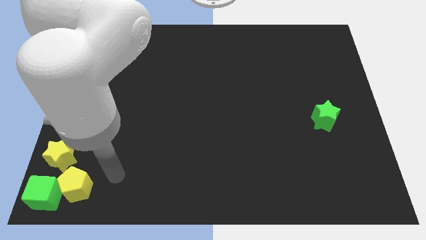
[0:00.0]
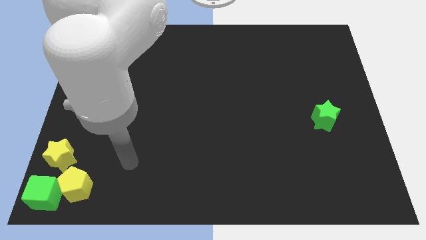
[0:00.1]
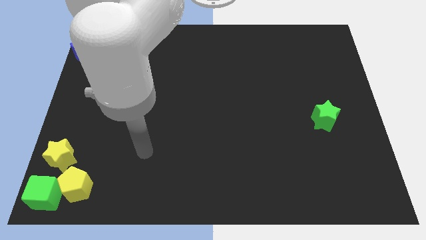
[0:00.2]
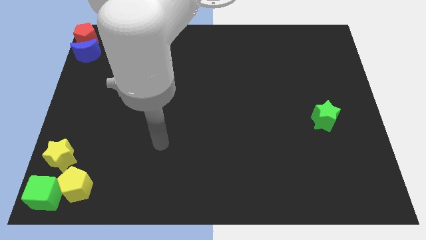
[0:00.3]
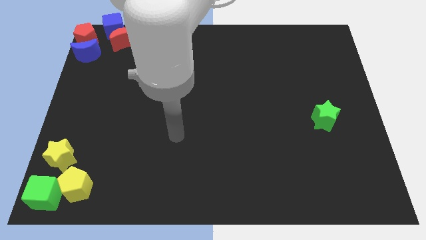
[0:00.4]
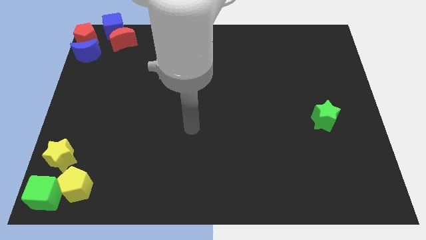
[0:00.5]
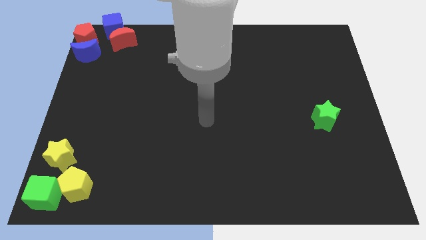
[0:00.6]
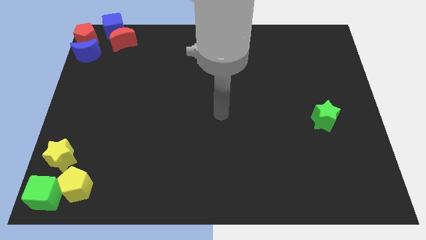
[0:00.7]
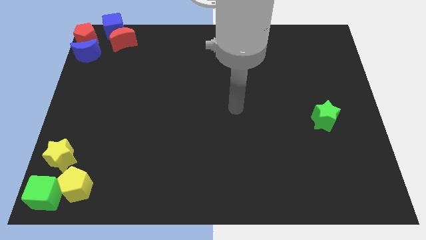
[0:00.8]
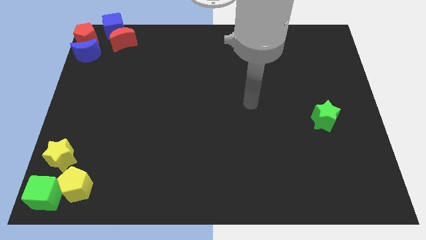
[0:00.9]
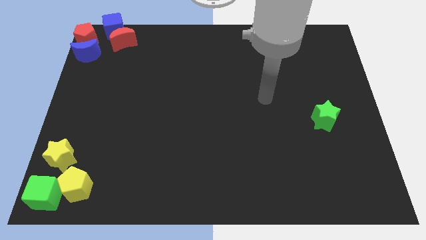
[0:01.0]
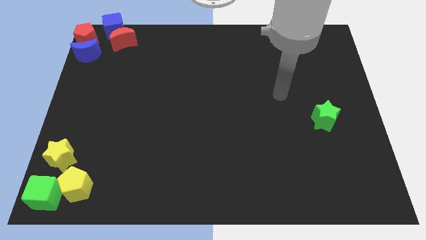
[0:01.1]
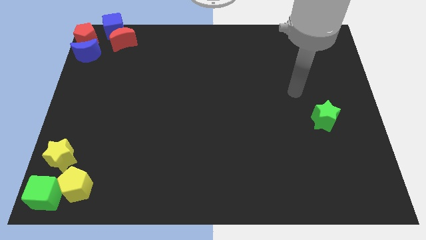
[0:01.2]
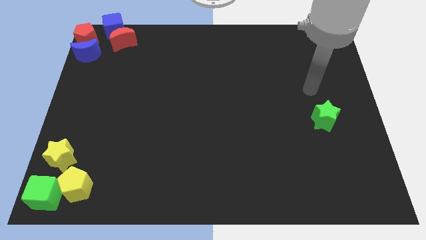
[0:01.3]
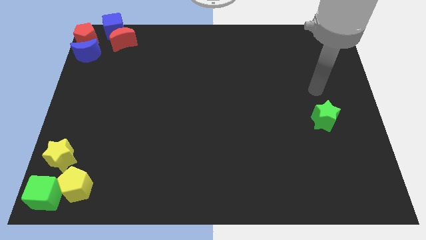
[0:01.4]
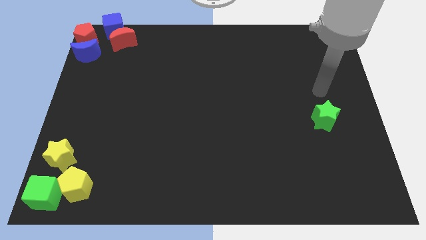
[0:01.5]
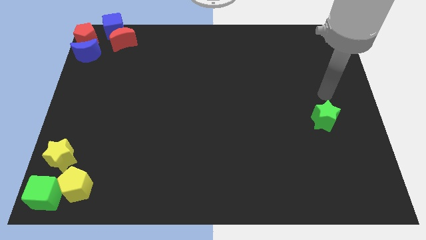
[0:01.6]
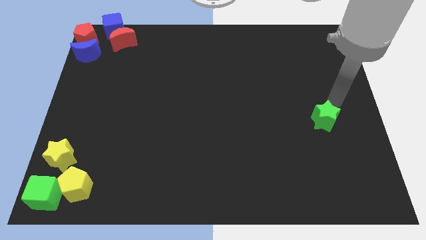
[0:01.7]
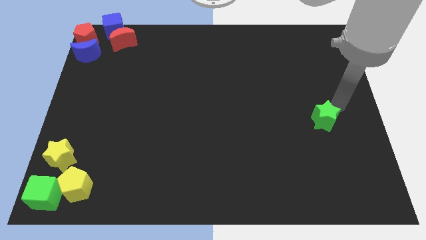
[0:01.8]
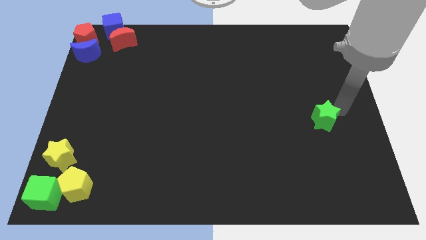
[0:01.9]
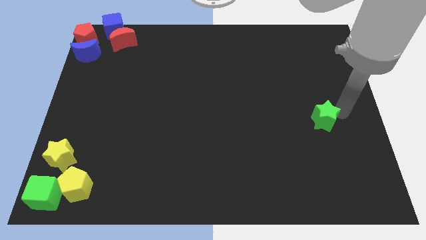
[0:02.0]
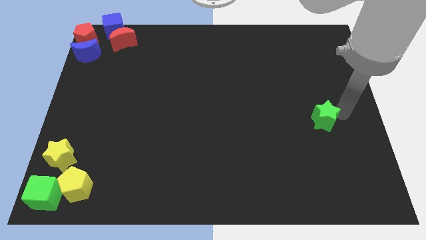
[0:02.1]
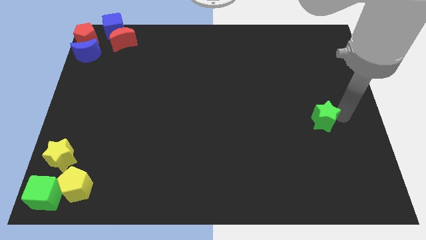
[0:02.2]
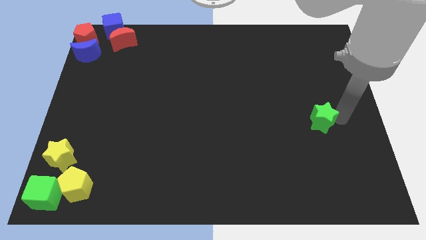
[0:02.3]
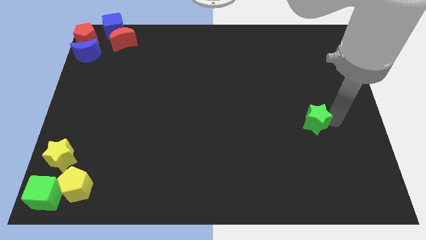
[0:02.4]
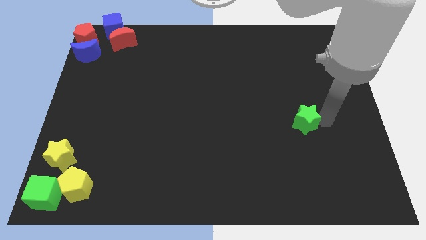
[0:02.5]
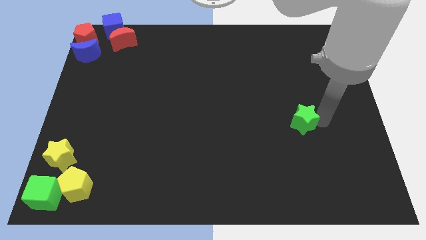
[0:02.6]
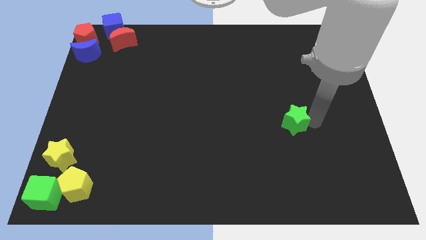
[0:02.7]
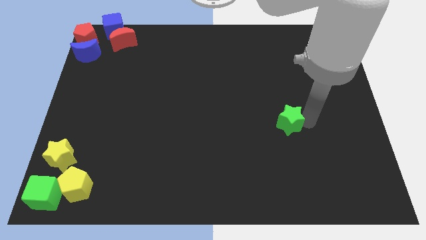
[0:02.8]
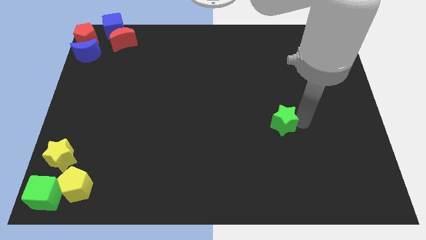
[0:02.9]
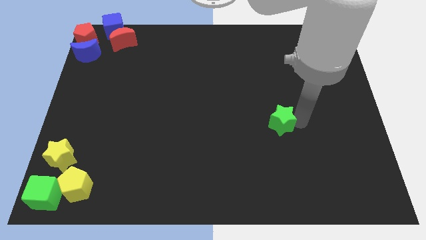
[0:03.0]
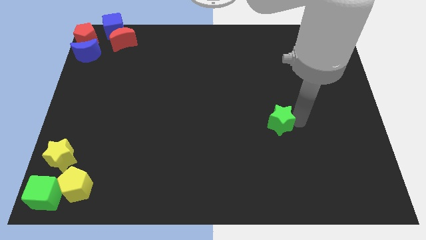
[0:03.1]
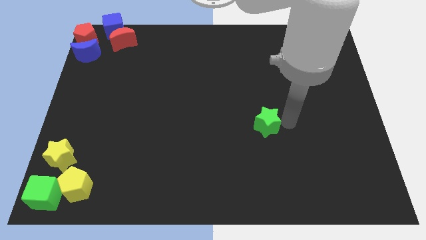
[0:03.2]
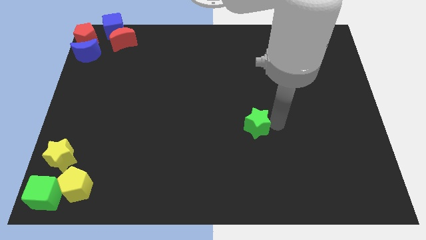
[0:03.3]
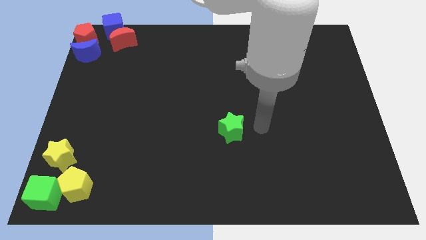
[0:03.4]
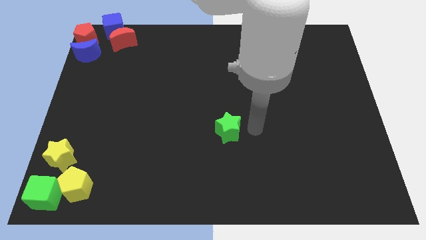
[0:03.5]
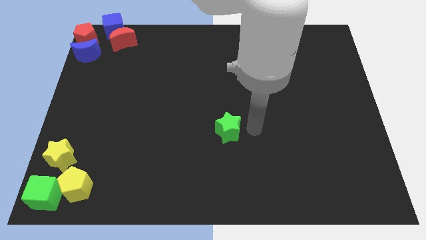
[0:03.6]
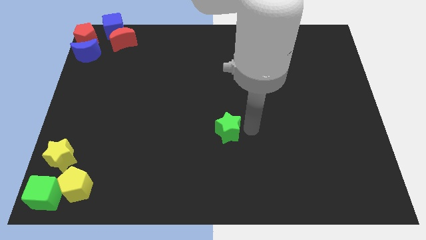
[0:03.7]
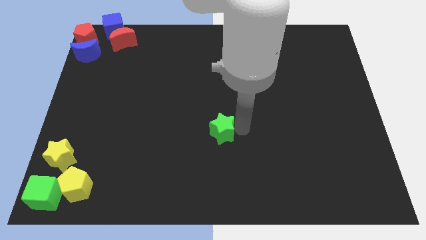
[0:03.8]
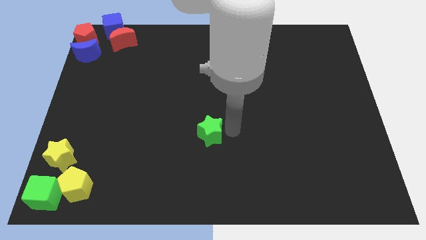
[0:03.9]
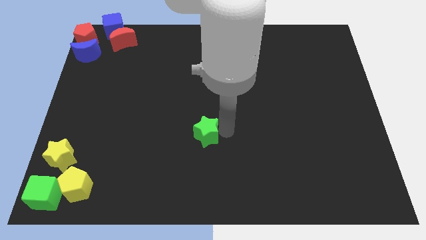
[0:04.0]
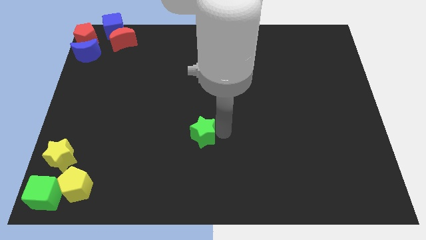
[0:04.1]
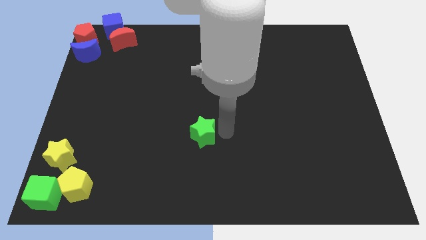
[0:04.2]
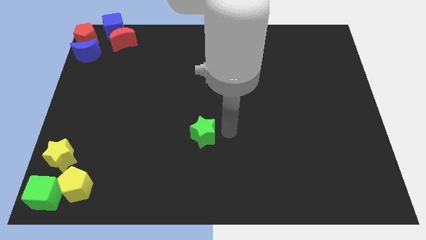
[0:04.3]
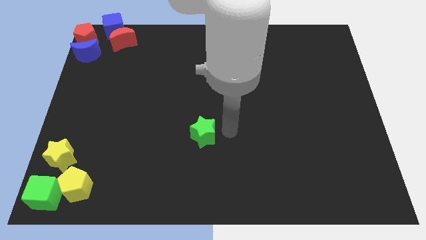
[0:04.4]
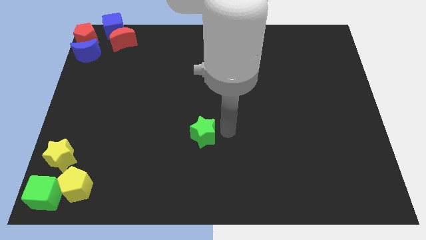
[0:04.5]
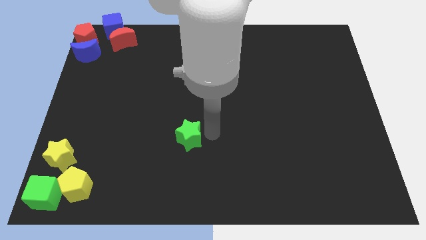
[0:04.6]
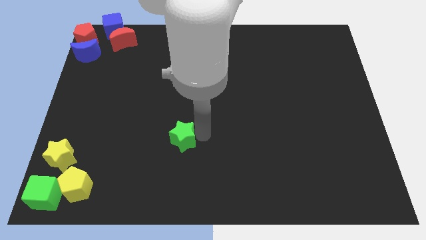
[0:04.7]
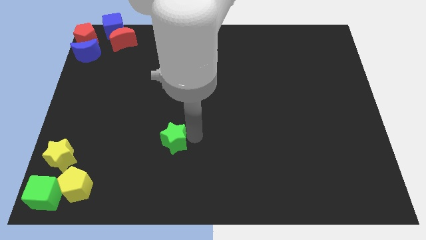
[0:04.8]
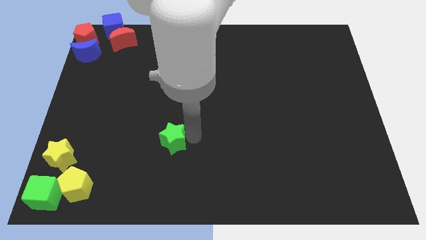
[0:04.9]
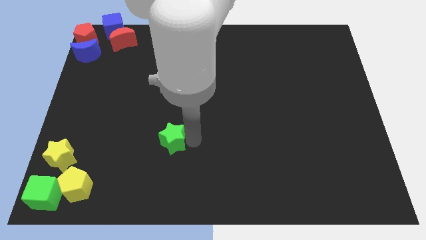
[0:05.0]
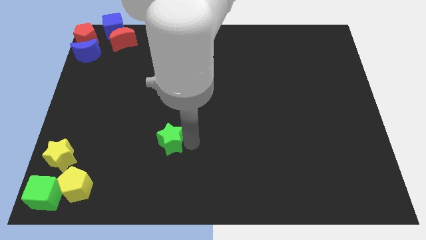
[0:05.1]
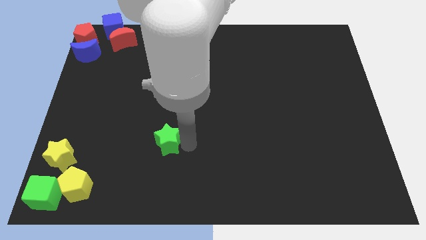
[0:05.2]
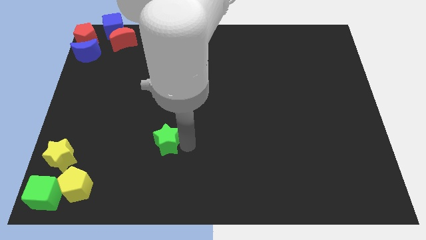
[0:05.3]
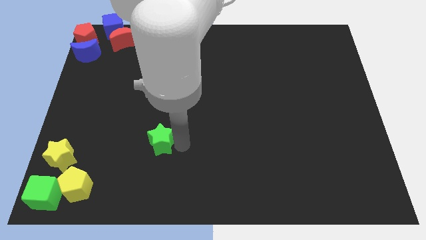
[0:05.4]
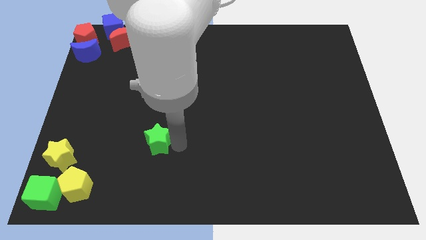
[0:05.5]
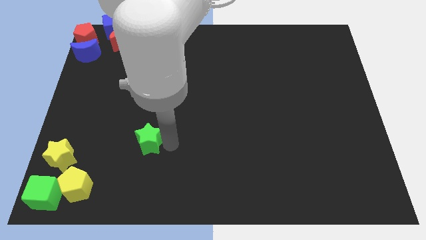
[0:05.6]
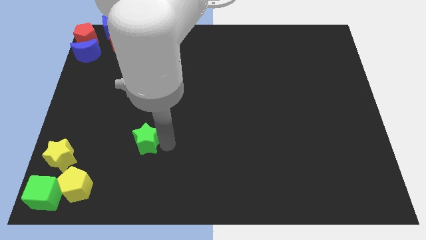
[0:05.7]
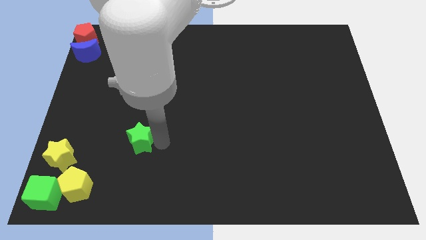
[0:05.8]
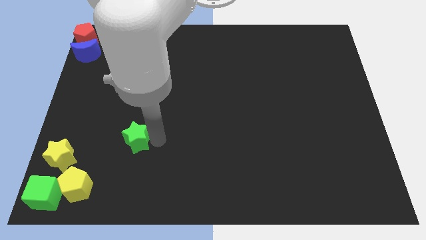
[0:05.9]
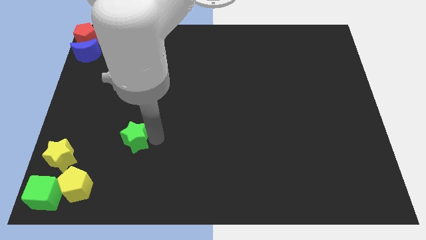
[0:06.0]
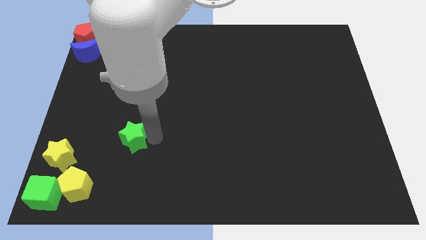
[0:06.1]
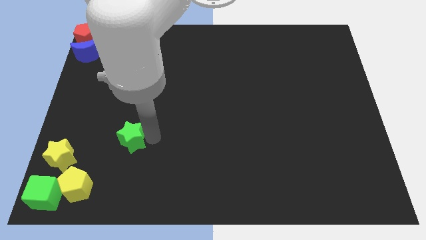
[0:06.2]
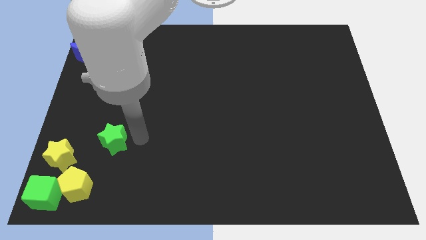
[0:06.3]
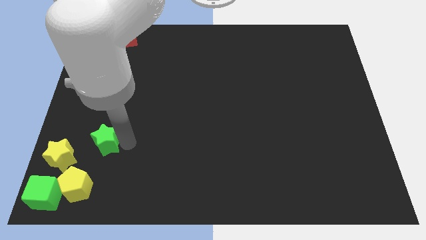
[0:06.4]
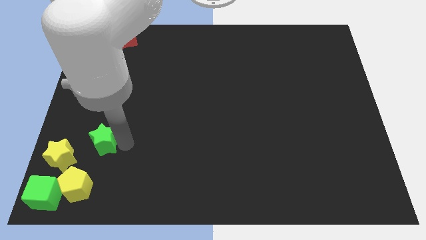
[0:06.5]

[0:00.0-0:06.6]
push the green star towards the right side of the yellow star

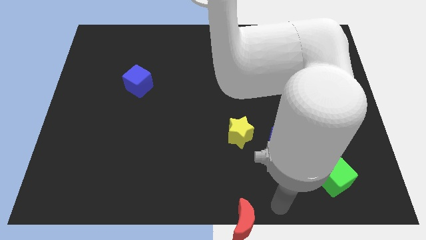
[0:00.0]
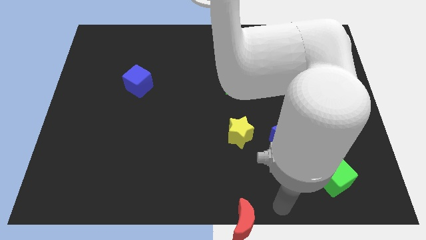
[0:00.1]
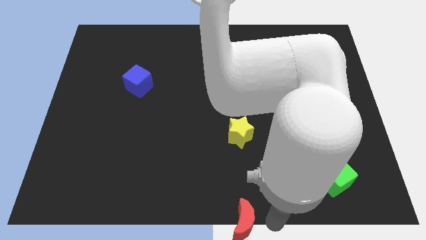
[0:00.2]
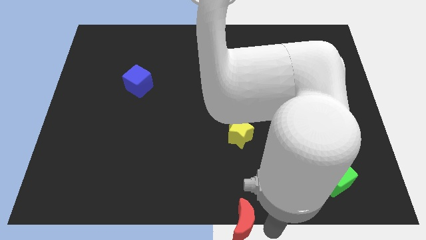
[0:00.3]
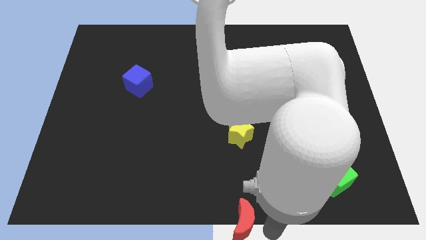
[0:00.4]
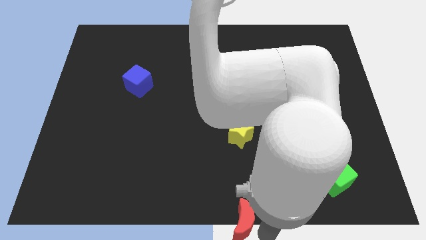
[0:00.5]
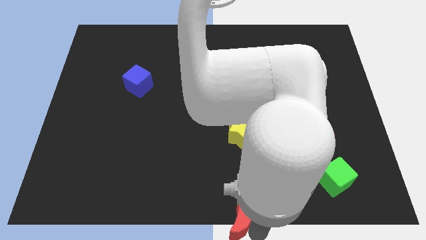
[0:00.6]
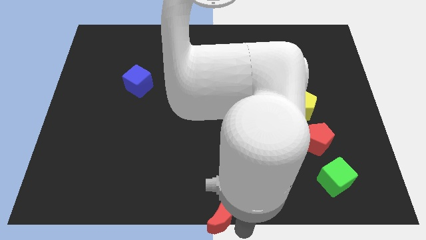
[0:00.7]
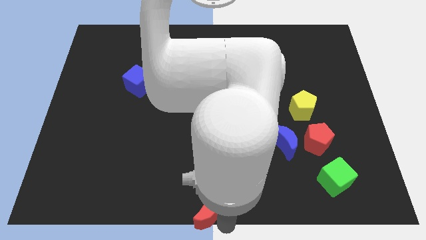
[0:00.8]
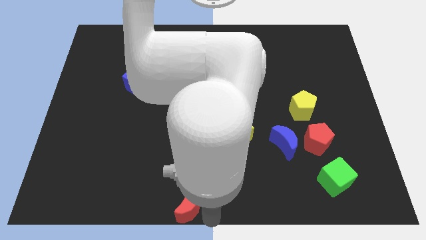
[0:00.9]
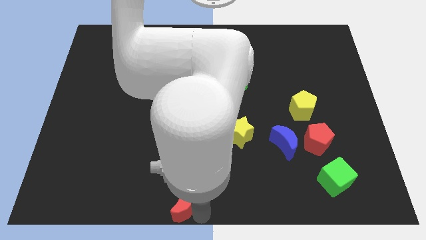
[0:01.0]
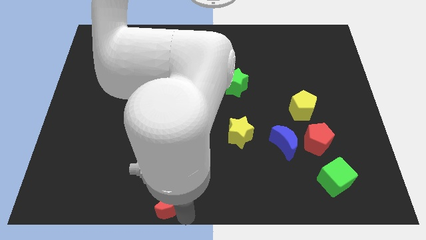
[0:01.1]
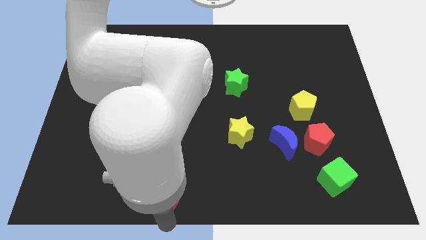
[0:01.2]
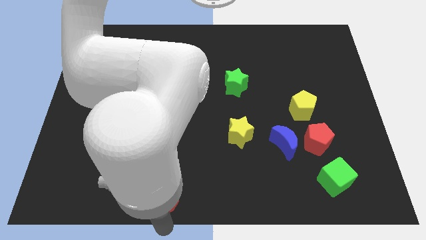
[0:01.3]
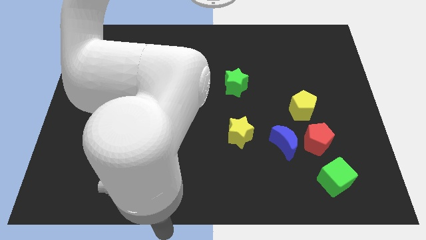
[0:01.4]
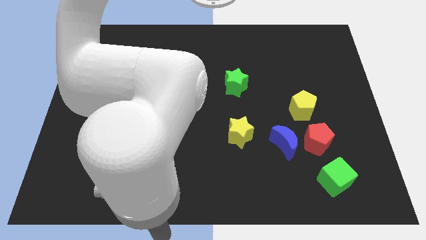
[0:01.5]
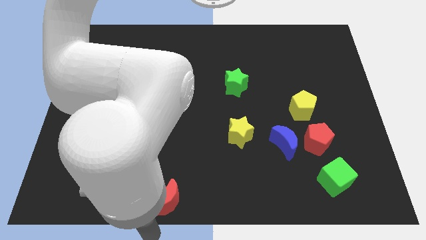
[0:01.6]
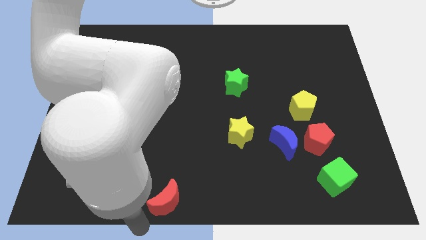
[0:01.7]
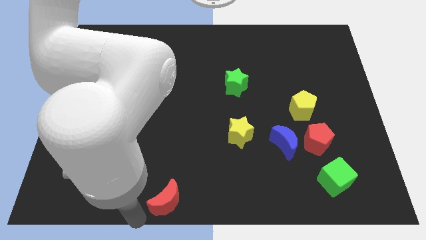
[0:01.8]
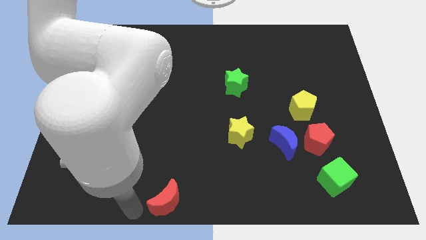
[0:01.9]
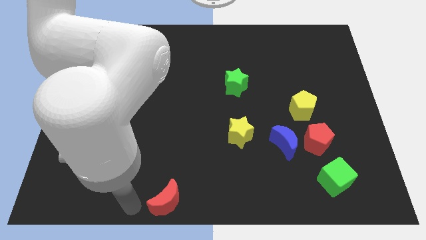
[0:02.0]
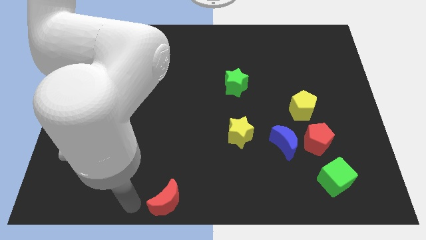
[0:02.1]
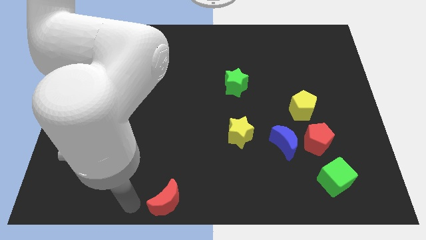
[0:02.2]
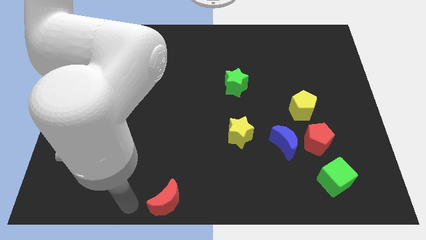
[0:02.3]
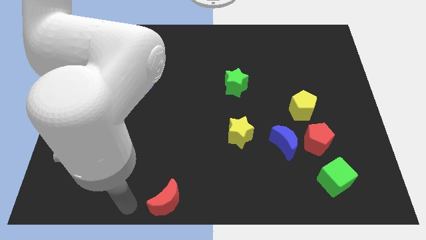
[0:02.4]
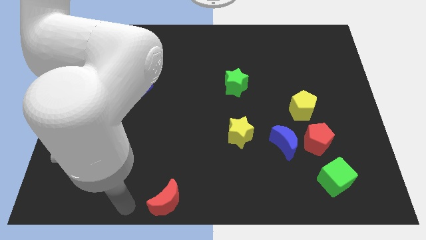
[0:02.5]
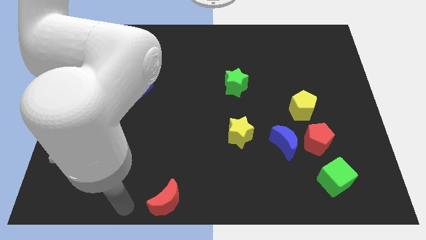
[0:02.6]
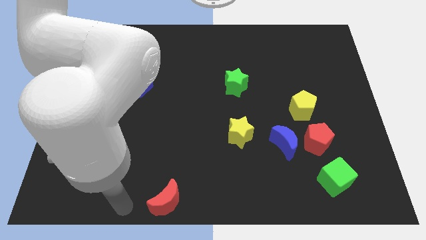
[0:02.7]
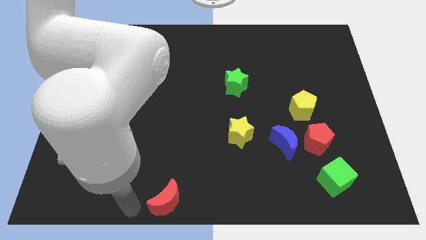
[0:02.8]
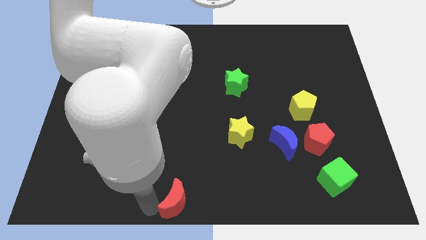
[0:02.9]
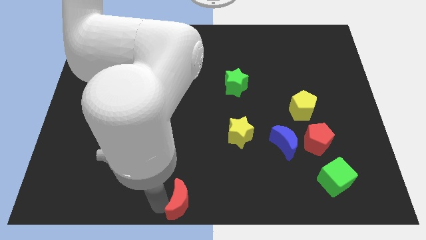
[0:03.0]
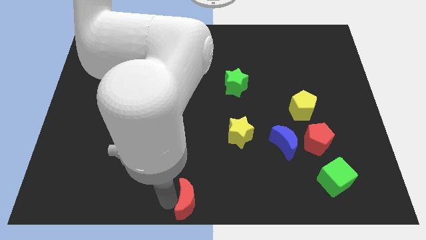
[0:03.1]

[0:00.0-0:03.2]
move red moon towards left side
